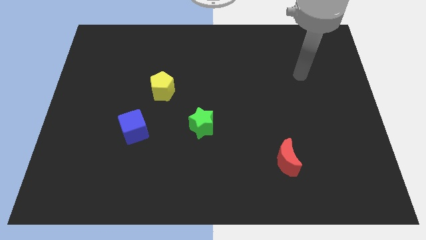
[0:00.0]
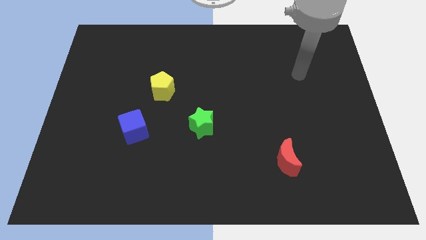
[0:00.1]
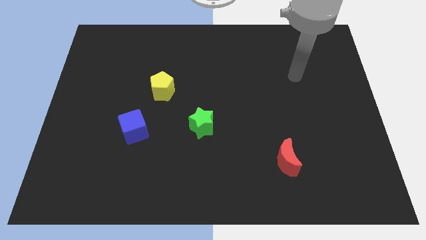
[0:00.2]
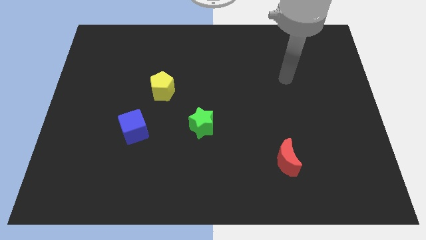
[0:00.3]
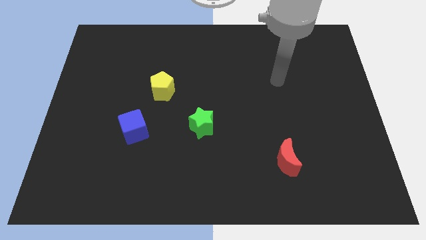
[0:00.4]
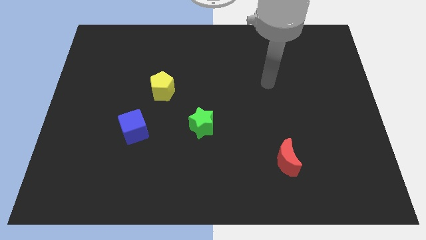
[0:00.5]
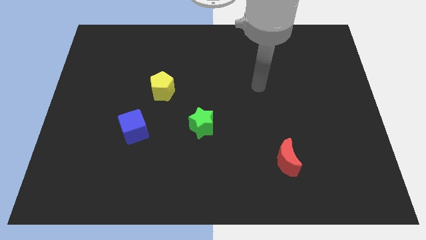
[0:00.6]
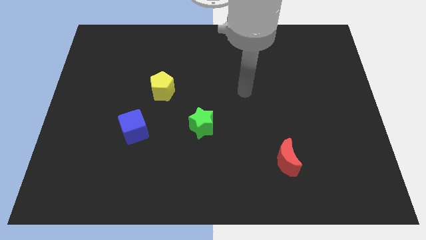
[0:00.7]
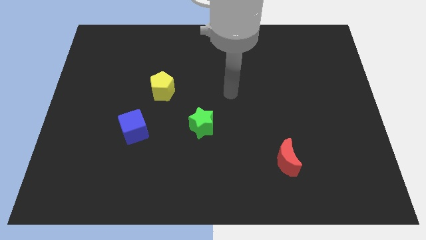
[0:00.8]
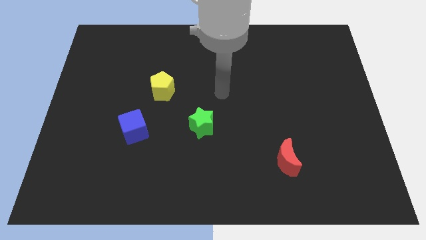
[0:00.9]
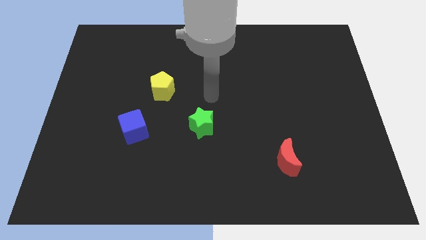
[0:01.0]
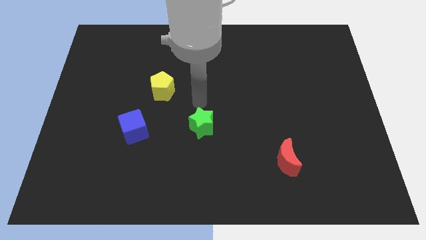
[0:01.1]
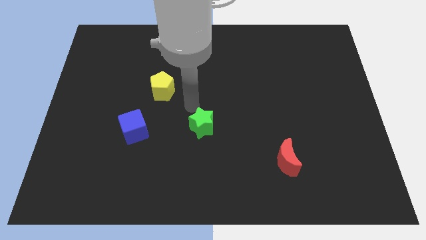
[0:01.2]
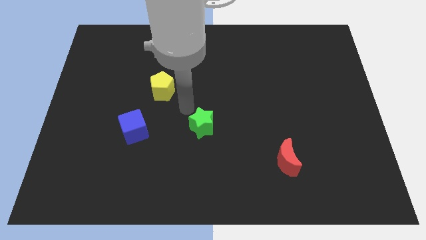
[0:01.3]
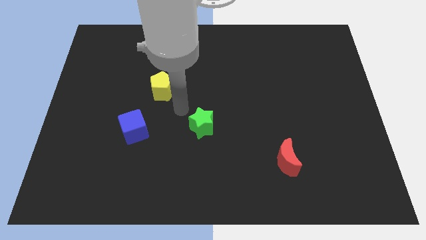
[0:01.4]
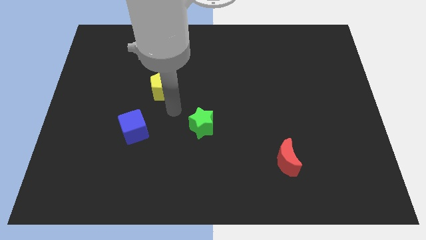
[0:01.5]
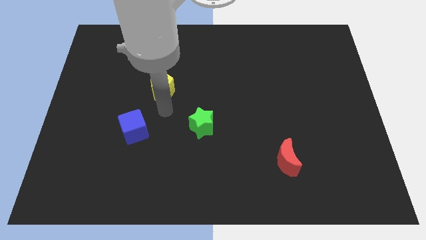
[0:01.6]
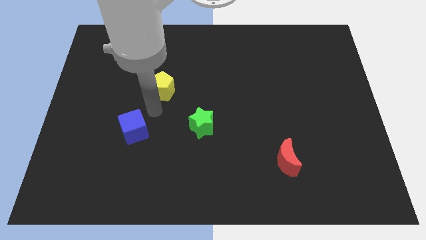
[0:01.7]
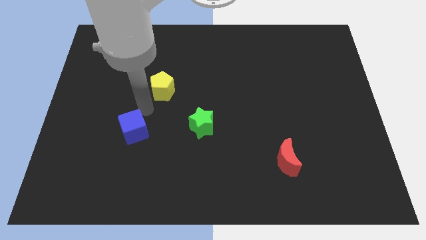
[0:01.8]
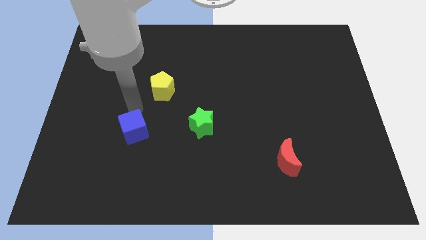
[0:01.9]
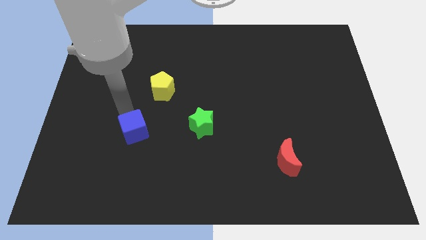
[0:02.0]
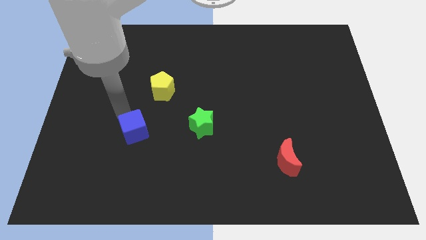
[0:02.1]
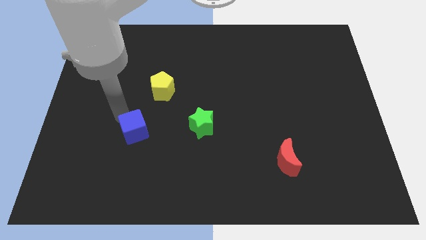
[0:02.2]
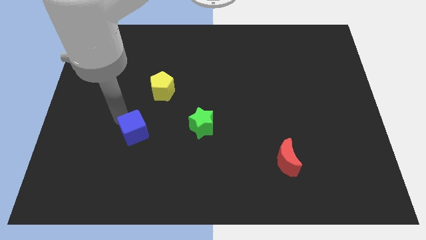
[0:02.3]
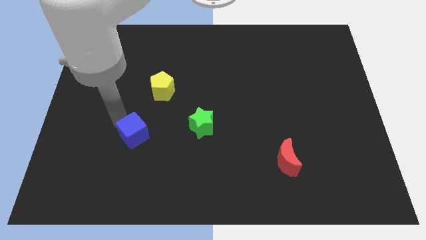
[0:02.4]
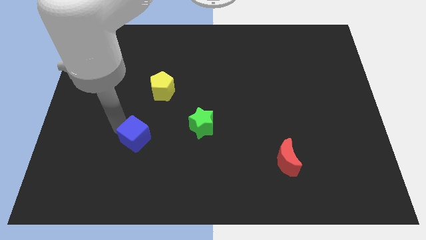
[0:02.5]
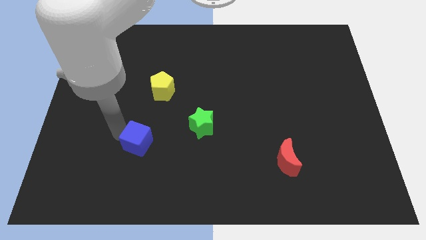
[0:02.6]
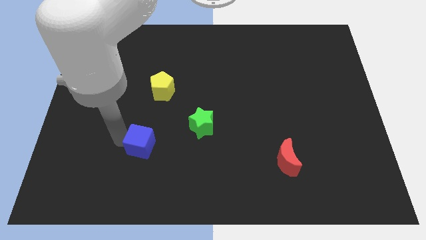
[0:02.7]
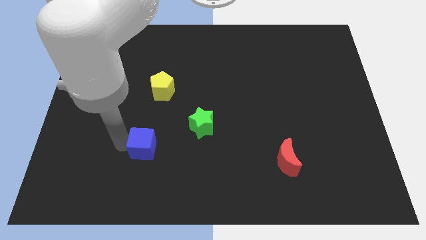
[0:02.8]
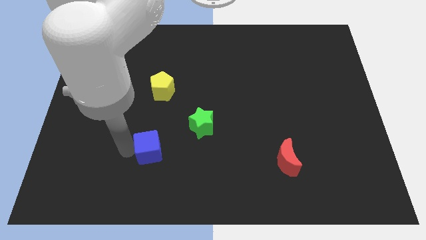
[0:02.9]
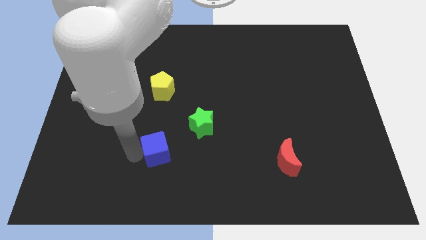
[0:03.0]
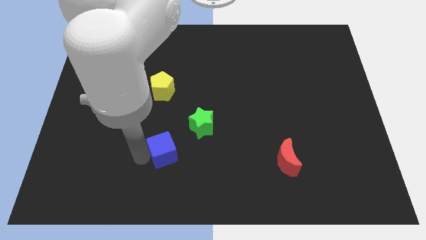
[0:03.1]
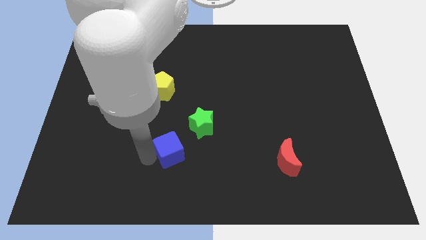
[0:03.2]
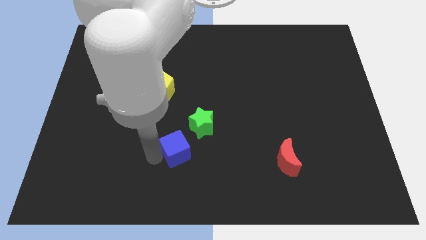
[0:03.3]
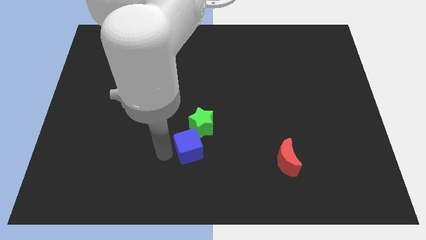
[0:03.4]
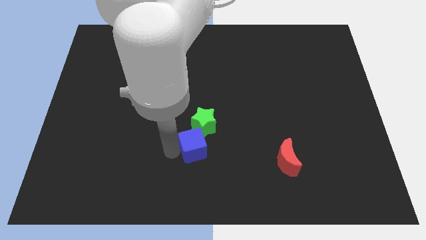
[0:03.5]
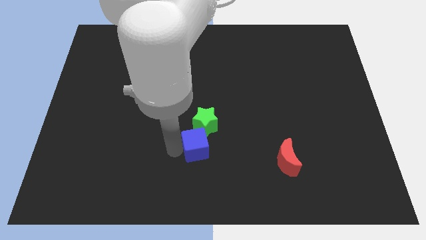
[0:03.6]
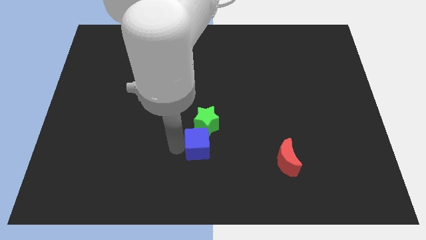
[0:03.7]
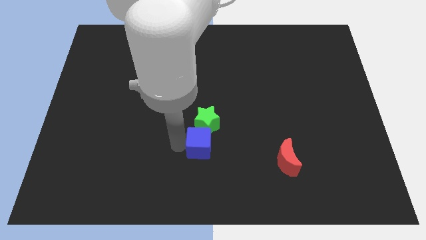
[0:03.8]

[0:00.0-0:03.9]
slide the blue cube next to the green block

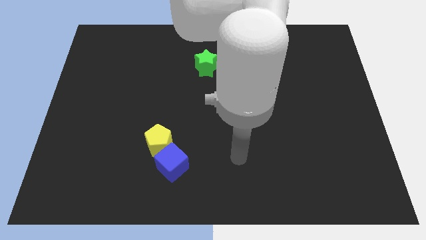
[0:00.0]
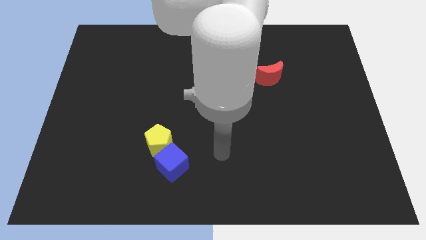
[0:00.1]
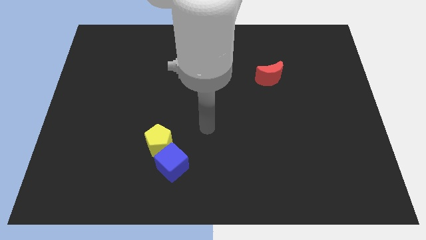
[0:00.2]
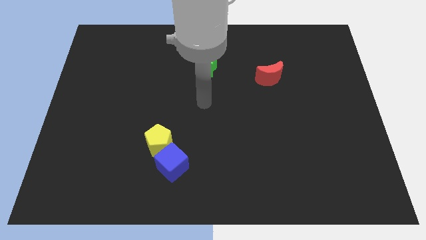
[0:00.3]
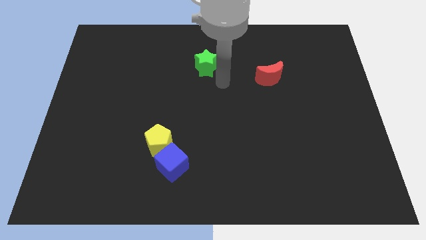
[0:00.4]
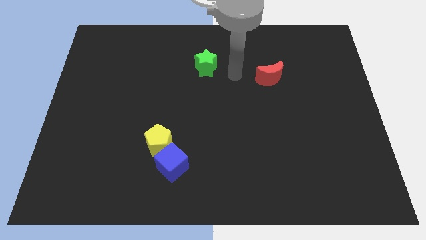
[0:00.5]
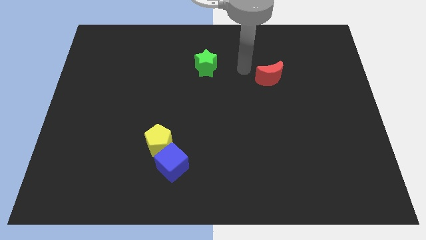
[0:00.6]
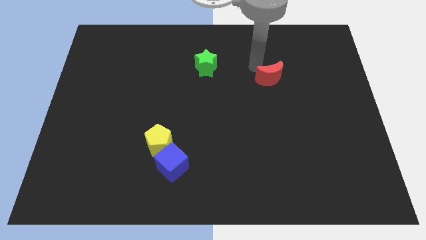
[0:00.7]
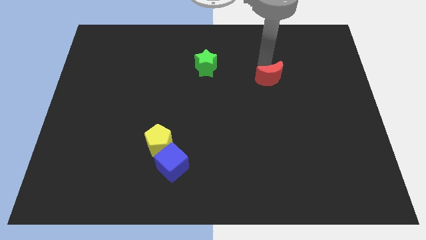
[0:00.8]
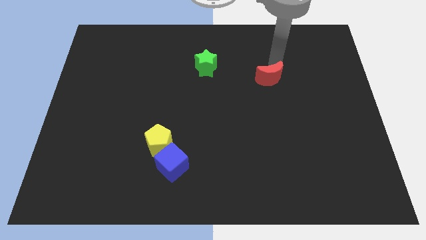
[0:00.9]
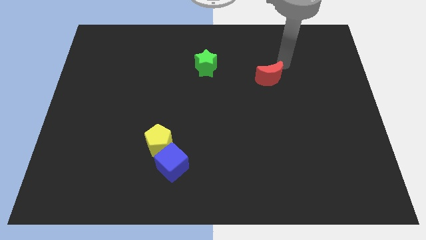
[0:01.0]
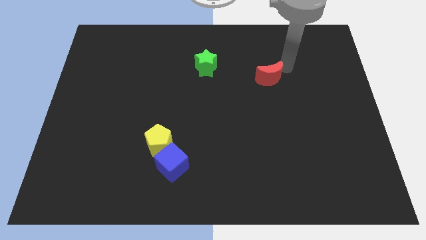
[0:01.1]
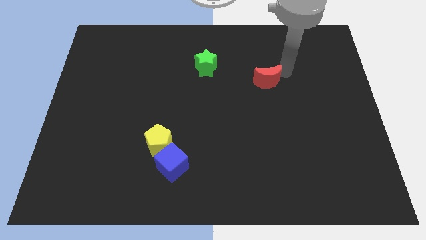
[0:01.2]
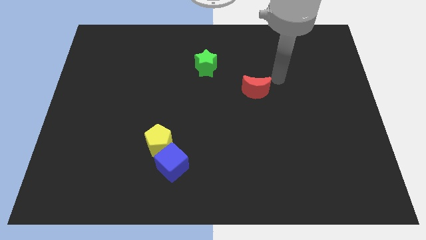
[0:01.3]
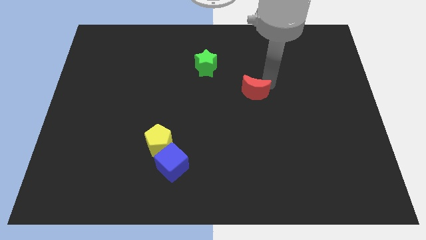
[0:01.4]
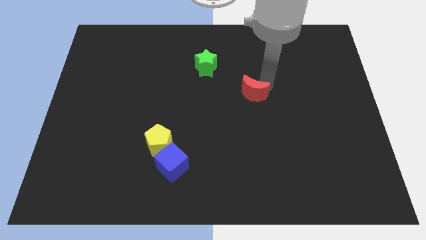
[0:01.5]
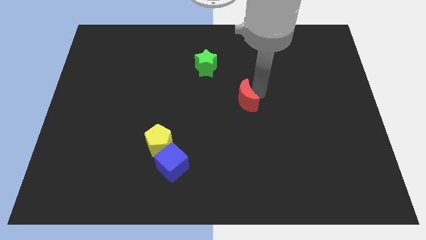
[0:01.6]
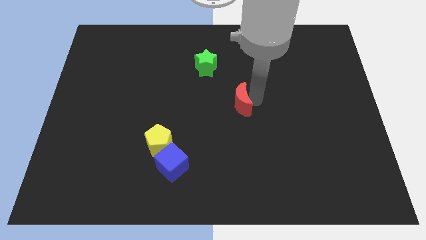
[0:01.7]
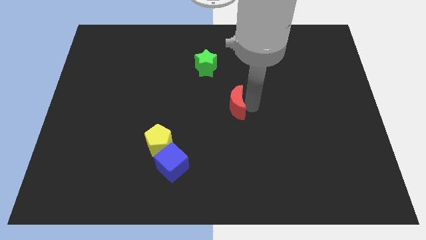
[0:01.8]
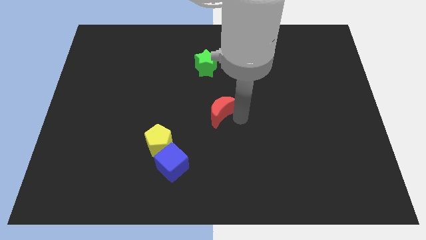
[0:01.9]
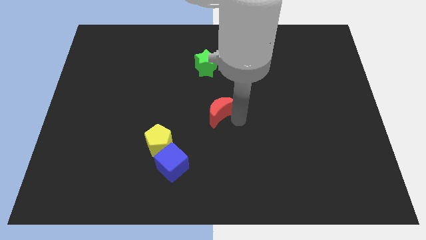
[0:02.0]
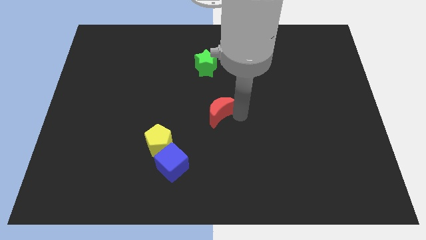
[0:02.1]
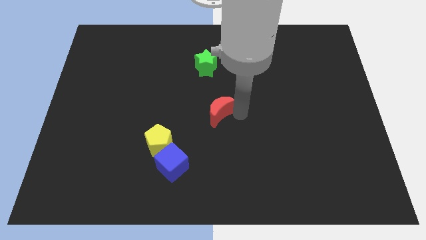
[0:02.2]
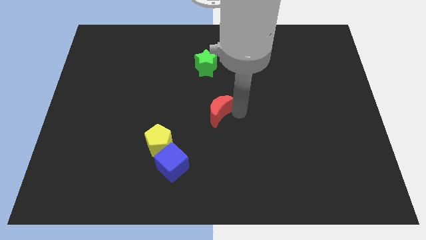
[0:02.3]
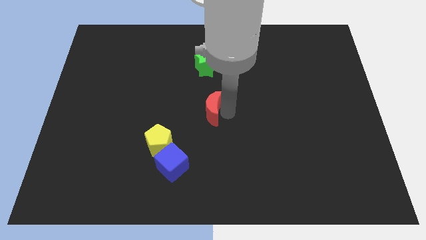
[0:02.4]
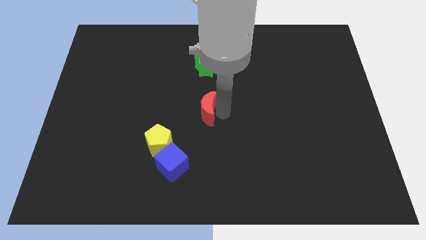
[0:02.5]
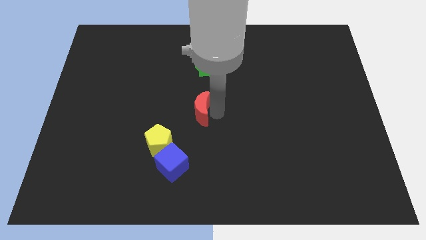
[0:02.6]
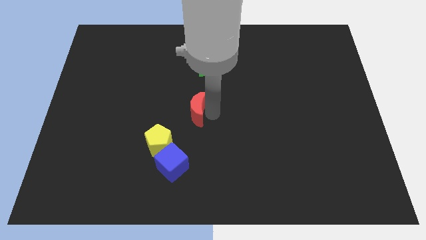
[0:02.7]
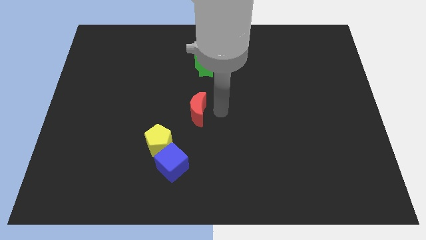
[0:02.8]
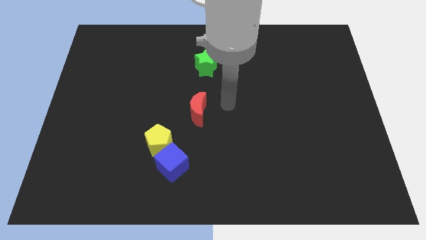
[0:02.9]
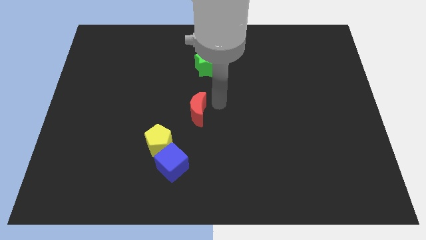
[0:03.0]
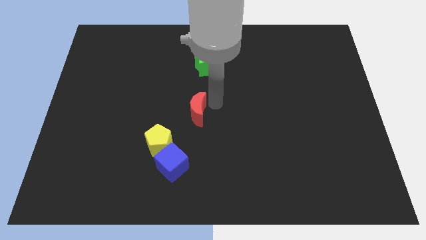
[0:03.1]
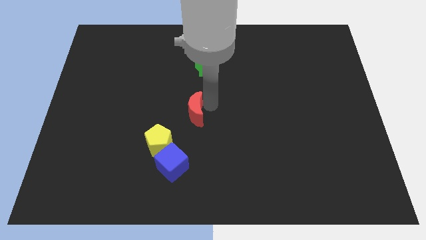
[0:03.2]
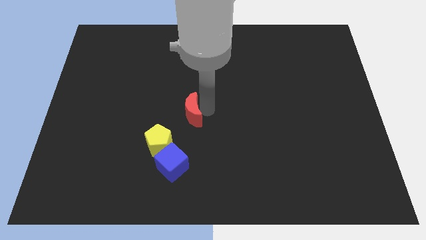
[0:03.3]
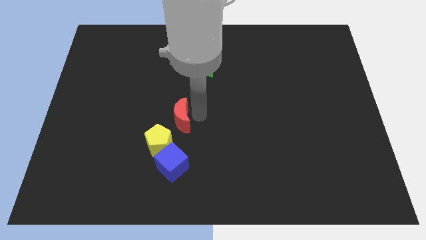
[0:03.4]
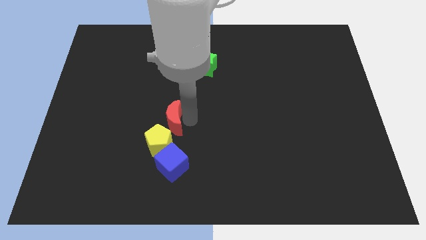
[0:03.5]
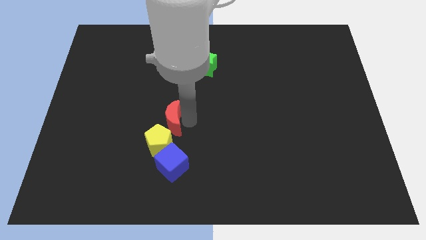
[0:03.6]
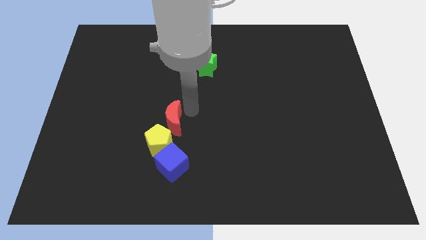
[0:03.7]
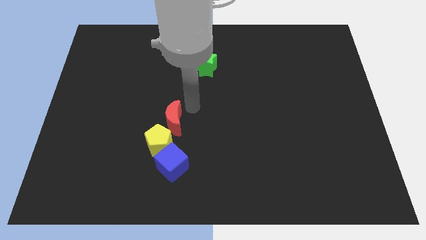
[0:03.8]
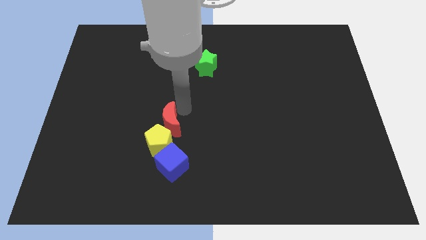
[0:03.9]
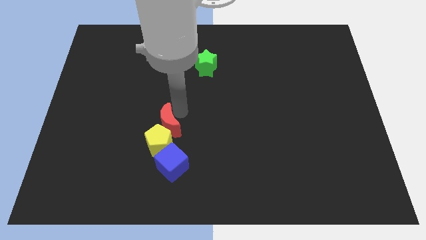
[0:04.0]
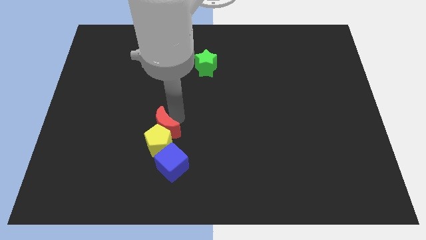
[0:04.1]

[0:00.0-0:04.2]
slide the moon close to the yellow block

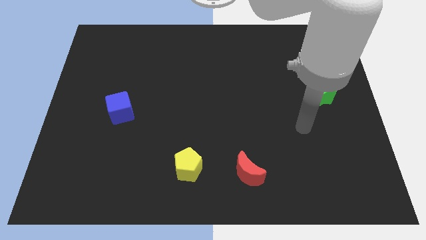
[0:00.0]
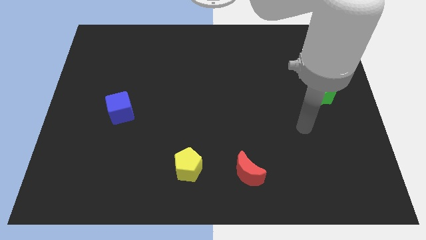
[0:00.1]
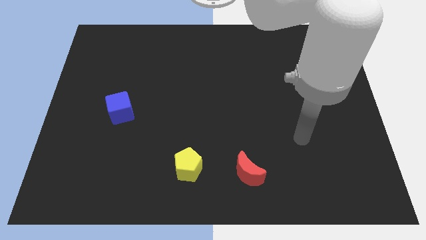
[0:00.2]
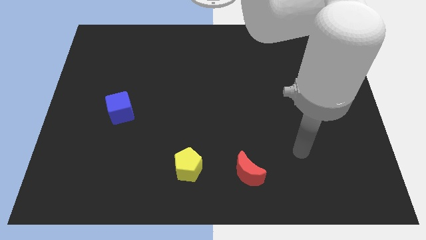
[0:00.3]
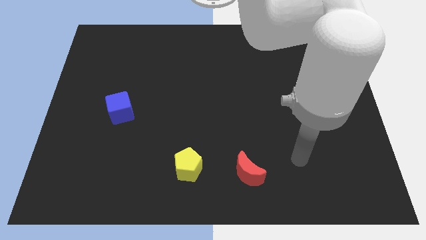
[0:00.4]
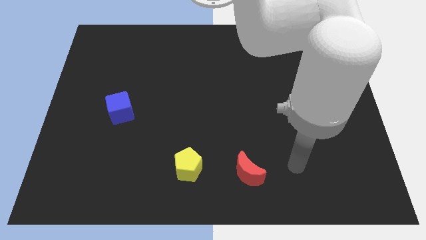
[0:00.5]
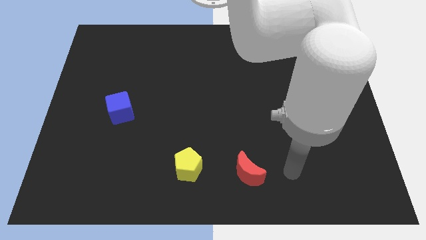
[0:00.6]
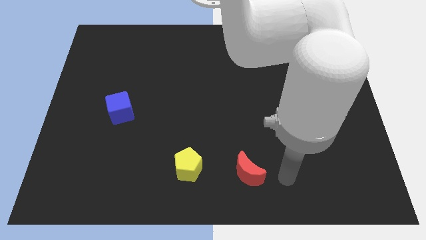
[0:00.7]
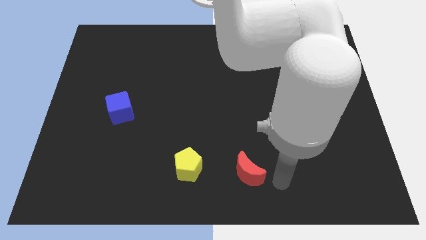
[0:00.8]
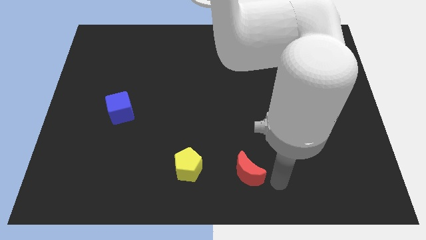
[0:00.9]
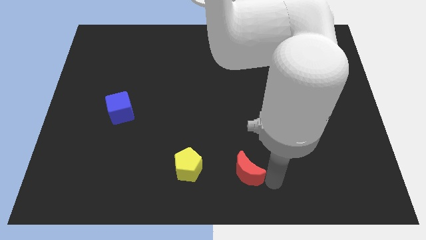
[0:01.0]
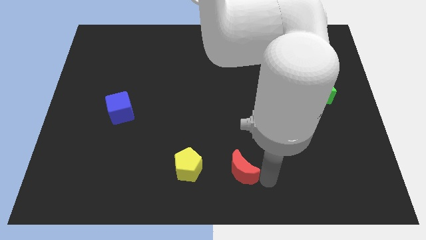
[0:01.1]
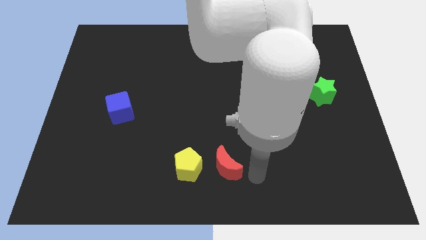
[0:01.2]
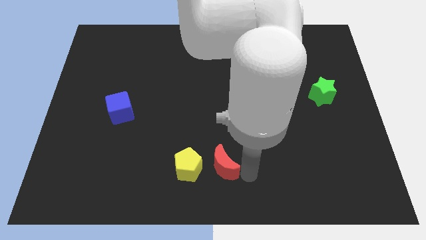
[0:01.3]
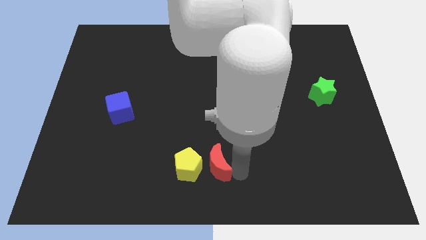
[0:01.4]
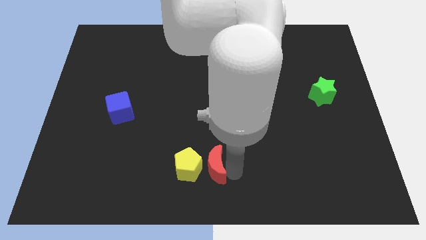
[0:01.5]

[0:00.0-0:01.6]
slide the red moon next to the yellow block
